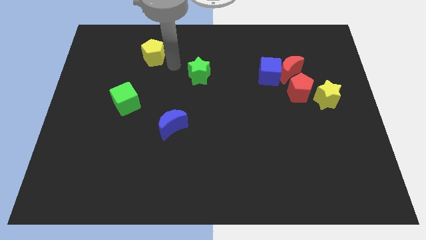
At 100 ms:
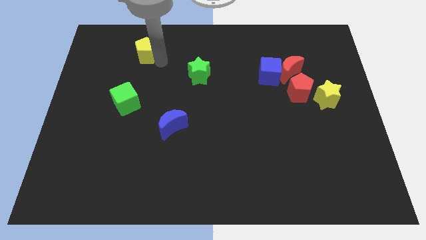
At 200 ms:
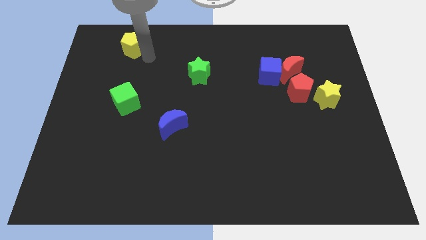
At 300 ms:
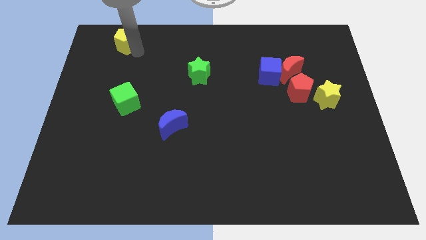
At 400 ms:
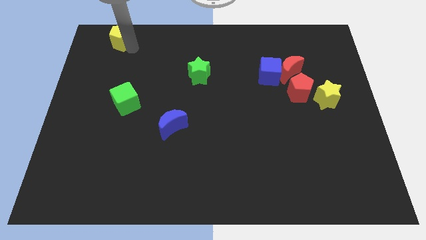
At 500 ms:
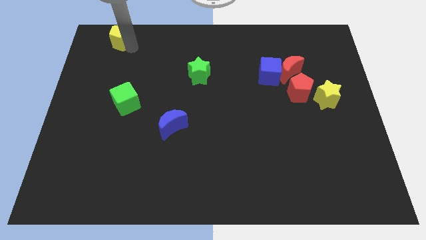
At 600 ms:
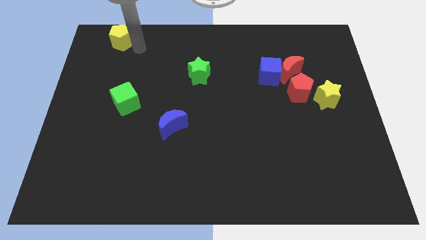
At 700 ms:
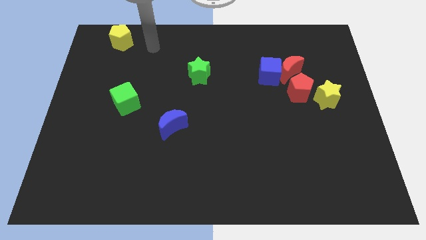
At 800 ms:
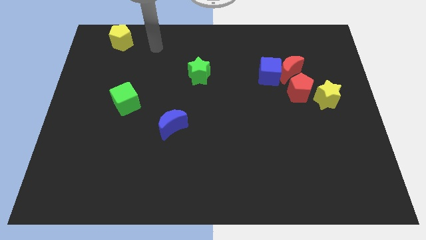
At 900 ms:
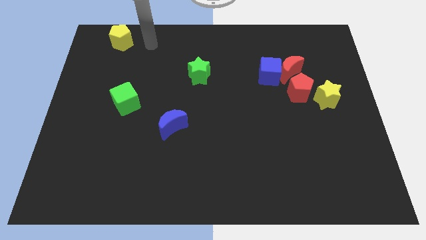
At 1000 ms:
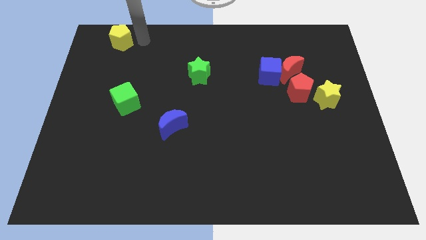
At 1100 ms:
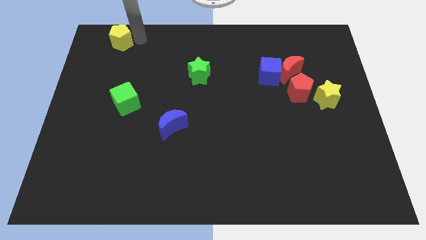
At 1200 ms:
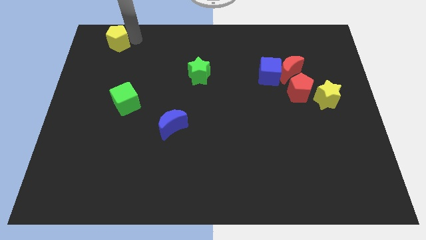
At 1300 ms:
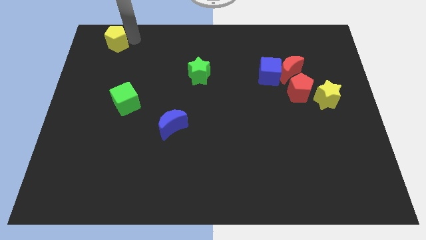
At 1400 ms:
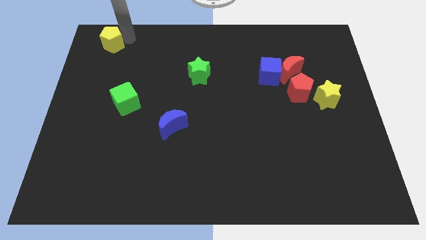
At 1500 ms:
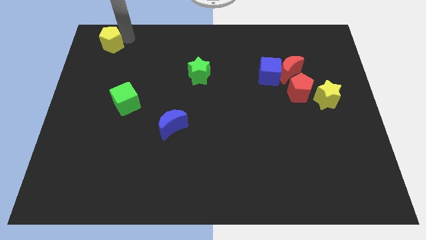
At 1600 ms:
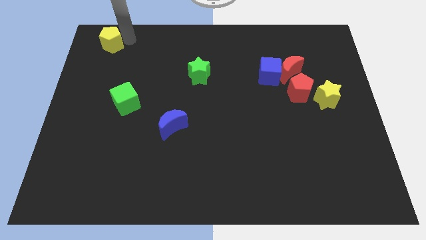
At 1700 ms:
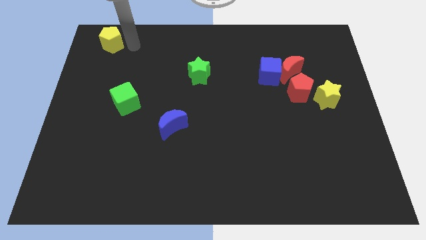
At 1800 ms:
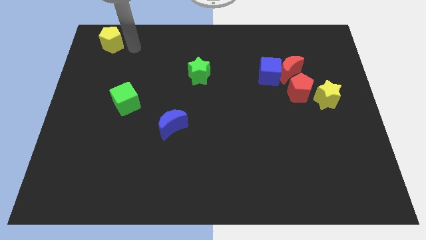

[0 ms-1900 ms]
move the yellow pentagon towards the top left of the board

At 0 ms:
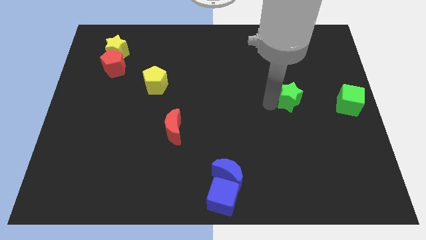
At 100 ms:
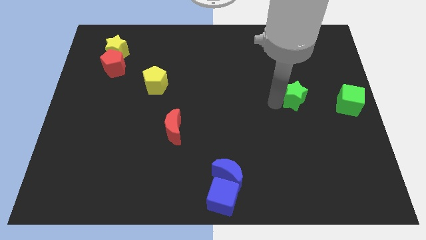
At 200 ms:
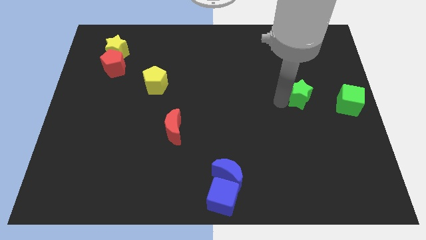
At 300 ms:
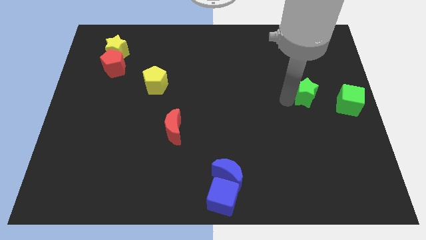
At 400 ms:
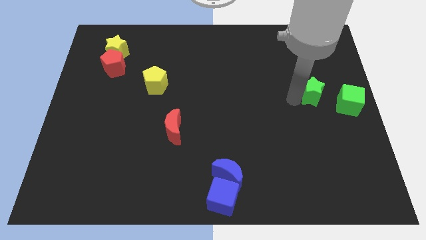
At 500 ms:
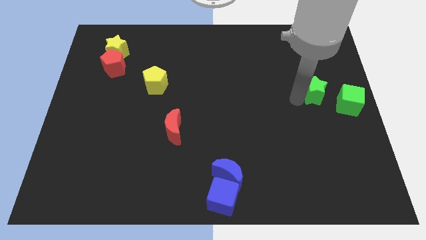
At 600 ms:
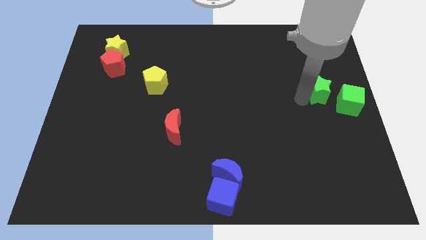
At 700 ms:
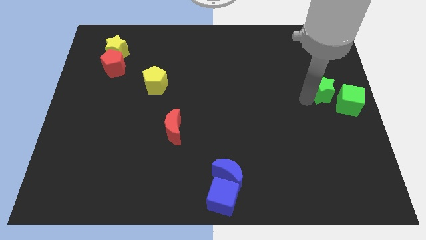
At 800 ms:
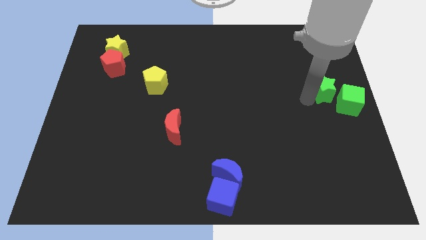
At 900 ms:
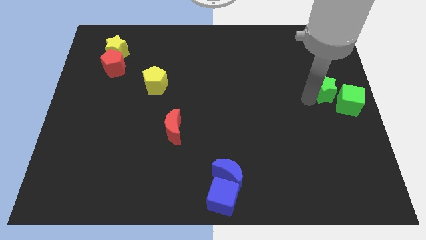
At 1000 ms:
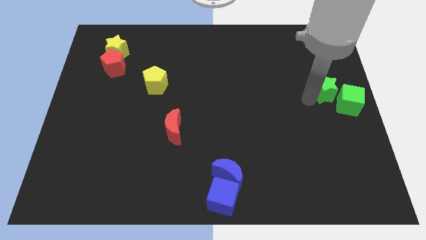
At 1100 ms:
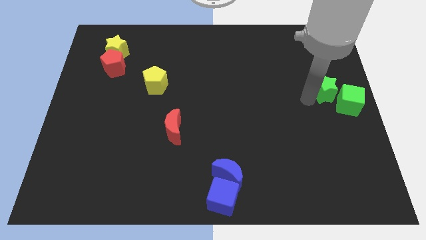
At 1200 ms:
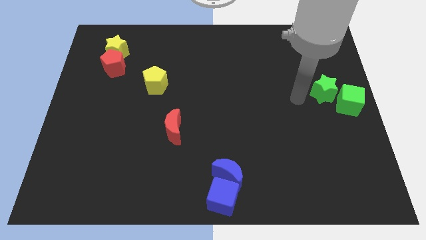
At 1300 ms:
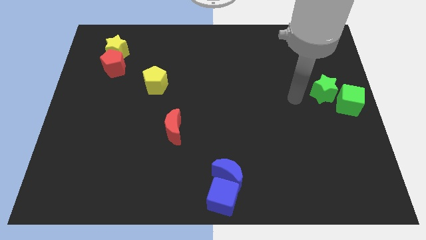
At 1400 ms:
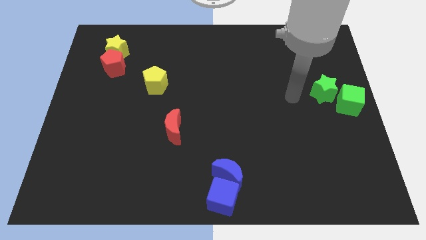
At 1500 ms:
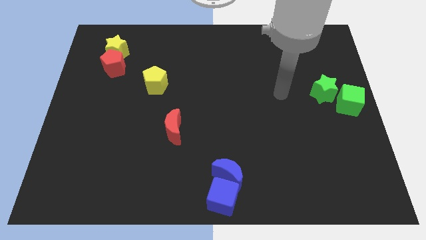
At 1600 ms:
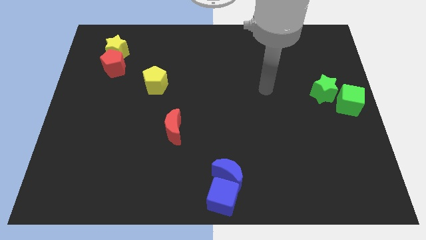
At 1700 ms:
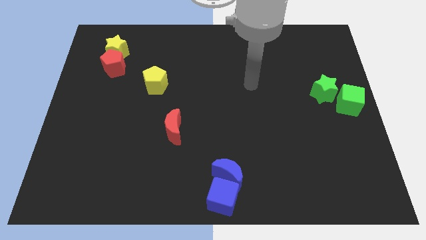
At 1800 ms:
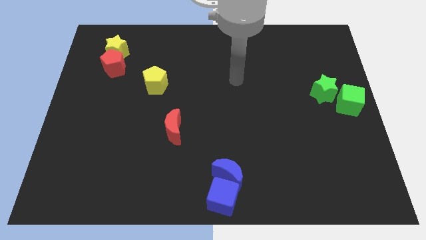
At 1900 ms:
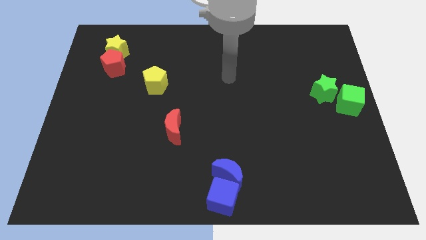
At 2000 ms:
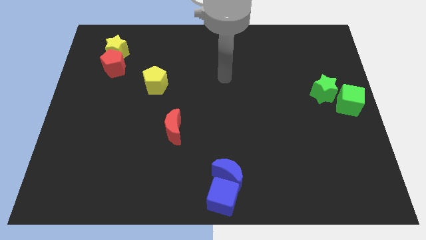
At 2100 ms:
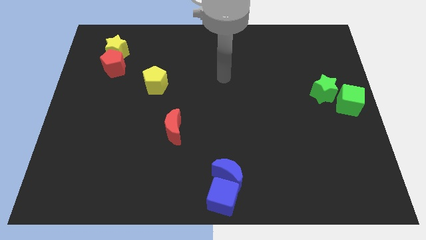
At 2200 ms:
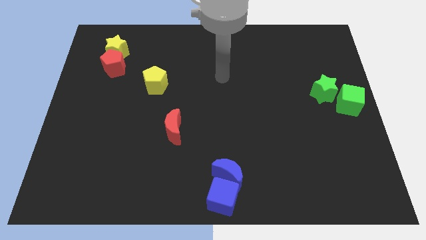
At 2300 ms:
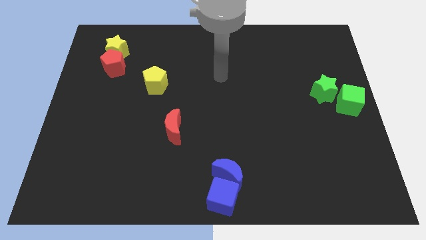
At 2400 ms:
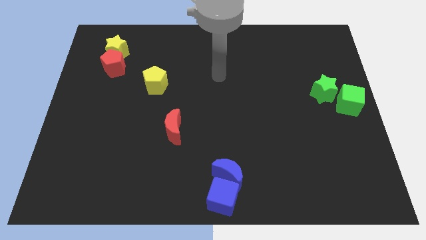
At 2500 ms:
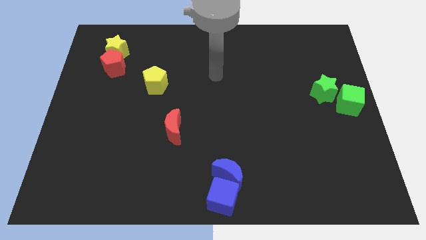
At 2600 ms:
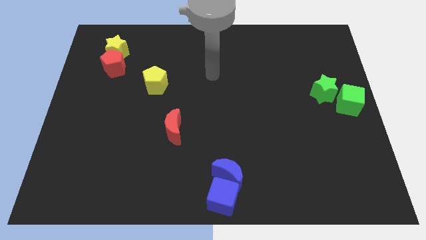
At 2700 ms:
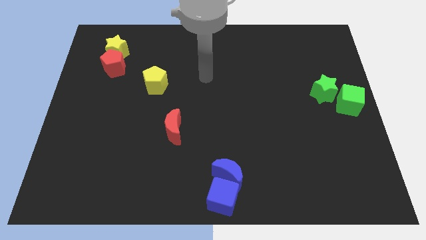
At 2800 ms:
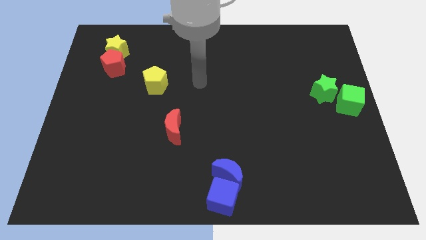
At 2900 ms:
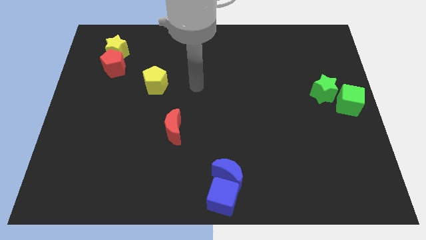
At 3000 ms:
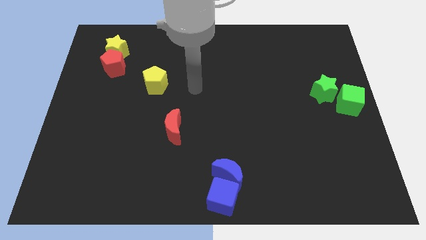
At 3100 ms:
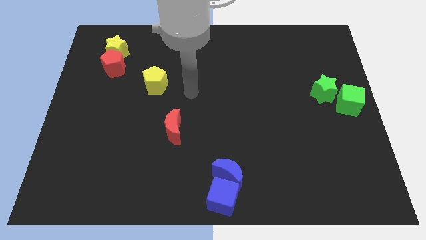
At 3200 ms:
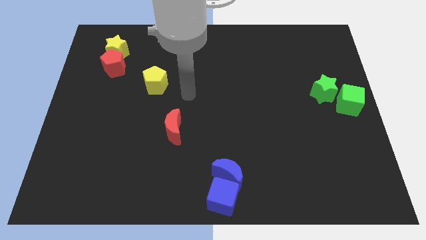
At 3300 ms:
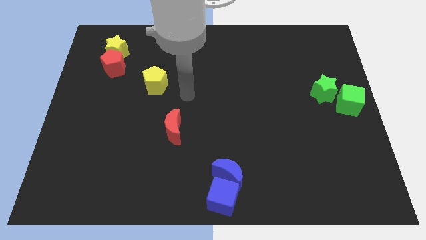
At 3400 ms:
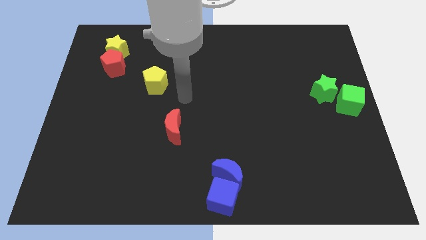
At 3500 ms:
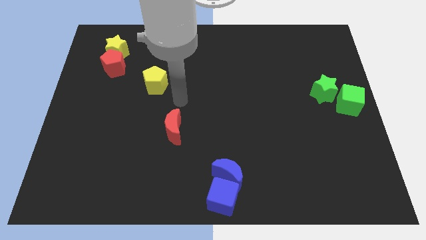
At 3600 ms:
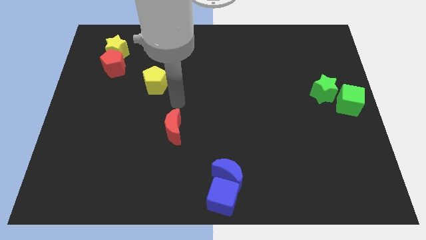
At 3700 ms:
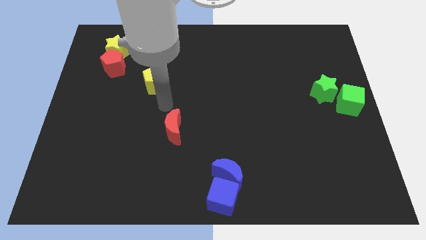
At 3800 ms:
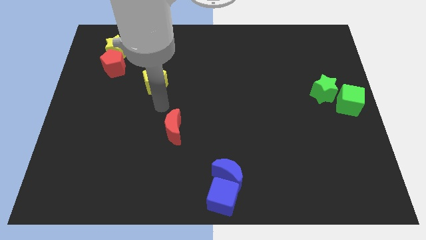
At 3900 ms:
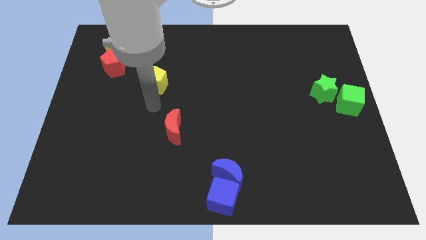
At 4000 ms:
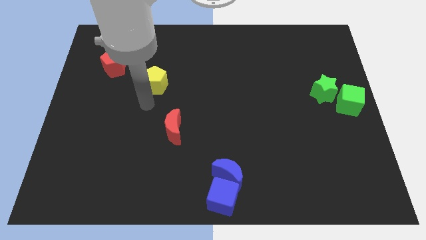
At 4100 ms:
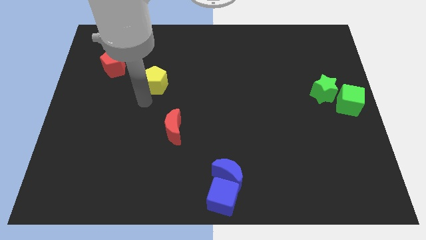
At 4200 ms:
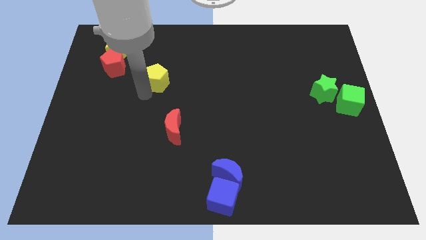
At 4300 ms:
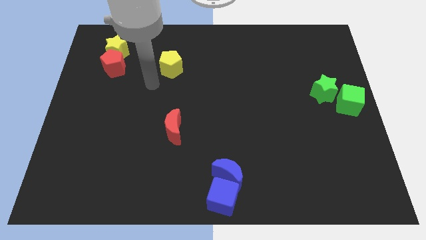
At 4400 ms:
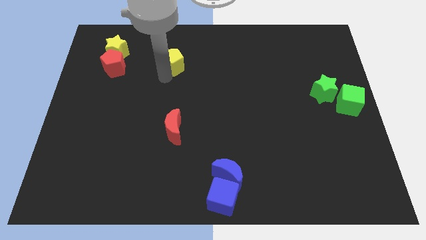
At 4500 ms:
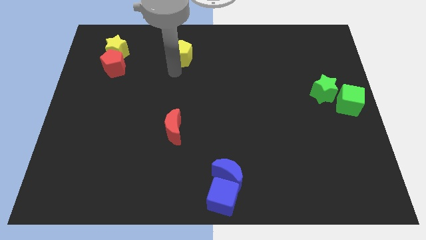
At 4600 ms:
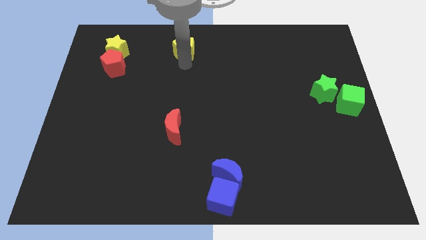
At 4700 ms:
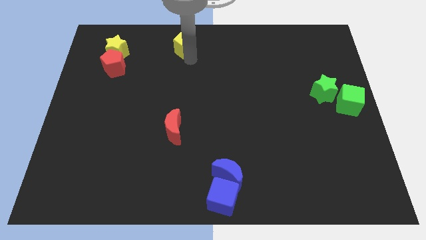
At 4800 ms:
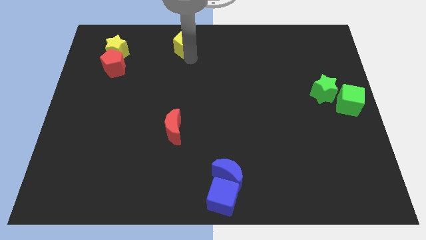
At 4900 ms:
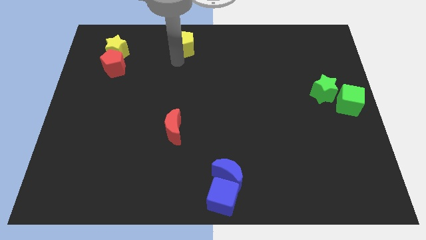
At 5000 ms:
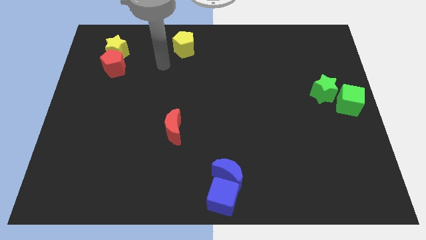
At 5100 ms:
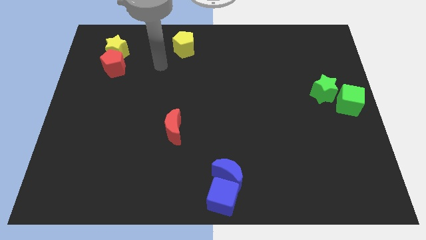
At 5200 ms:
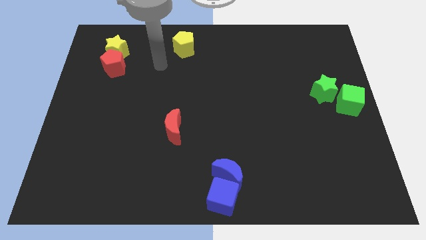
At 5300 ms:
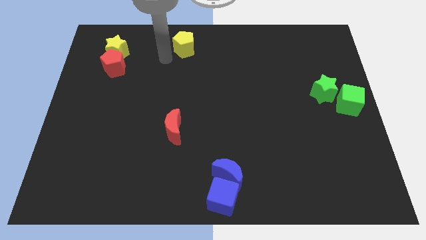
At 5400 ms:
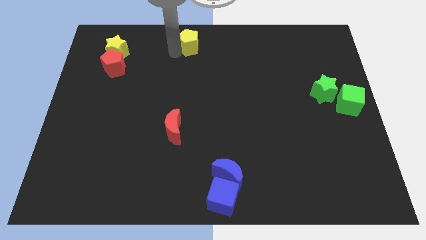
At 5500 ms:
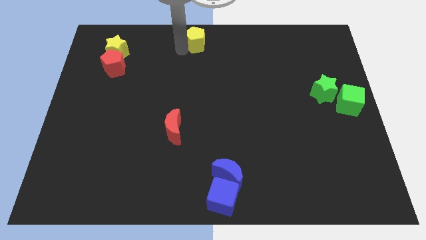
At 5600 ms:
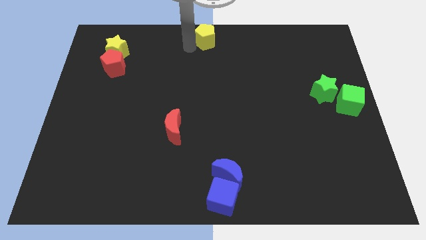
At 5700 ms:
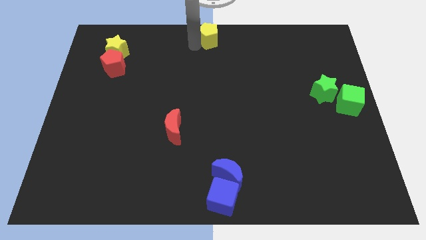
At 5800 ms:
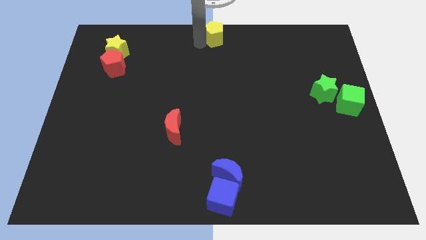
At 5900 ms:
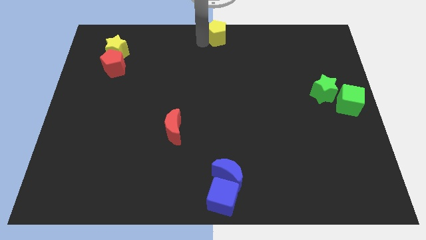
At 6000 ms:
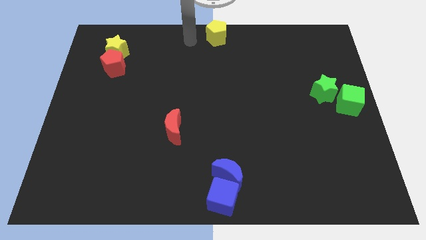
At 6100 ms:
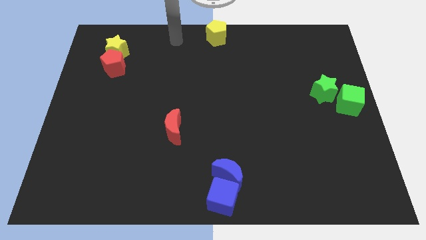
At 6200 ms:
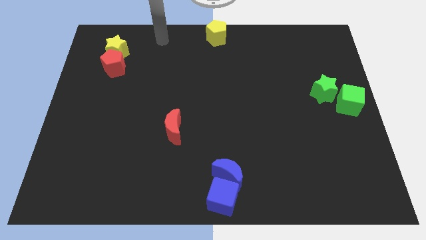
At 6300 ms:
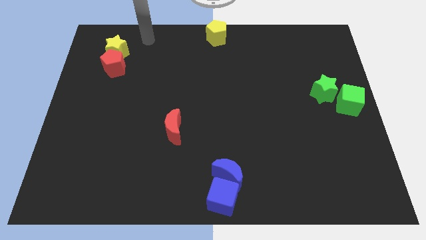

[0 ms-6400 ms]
place the yellow pentagon at the top center of the board

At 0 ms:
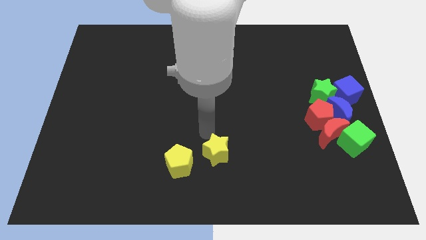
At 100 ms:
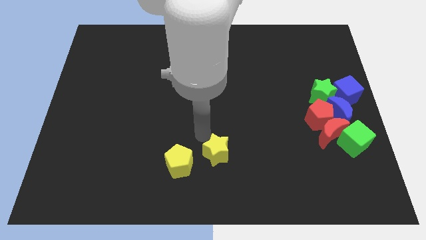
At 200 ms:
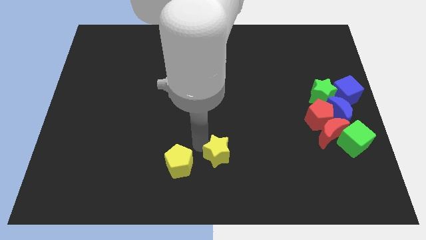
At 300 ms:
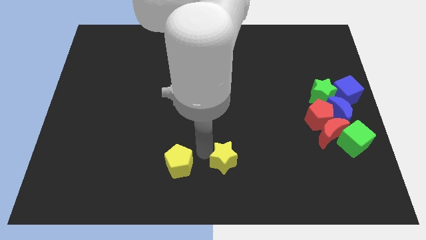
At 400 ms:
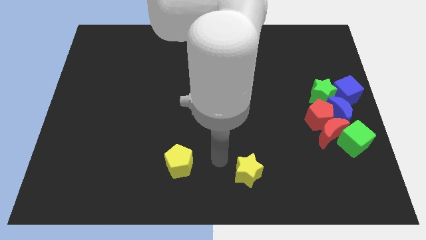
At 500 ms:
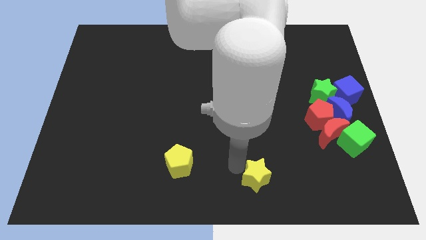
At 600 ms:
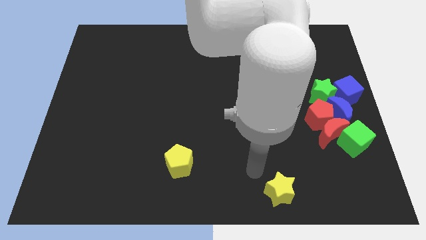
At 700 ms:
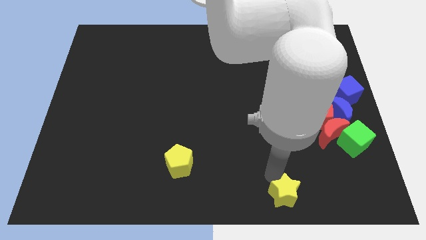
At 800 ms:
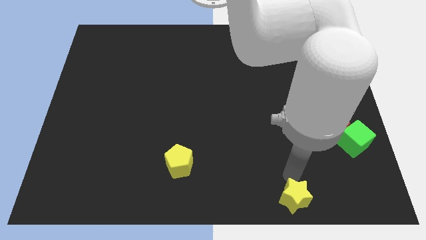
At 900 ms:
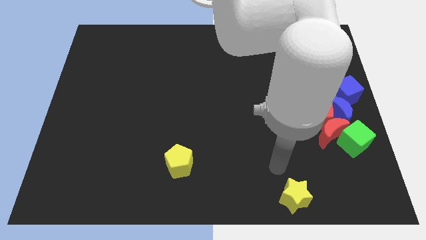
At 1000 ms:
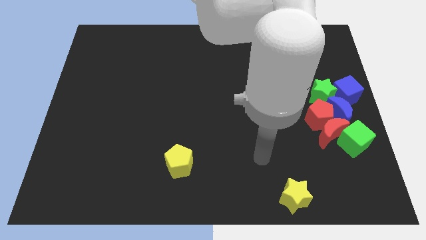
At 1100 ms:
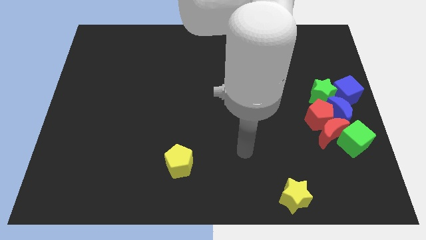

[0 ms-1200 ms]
move the yellow star to the bottom of the board
